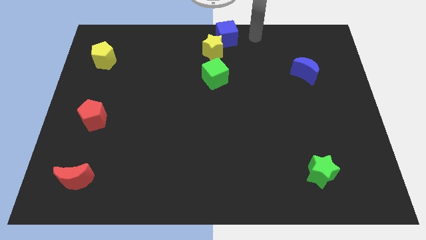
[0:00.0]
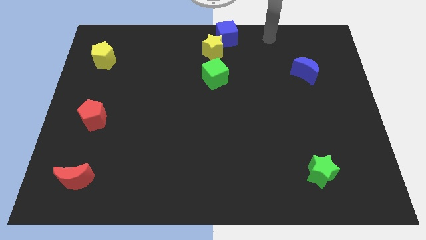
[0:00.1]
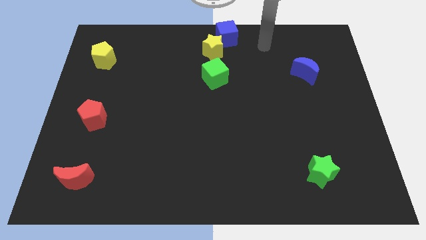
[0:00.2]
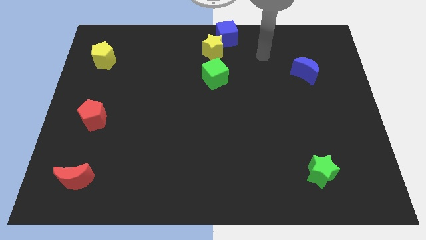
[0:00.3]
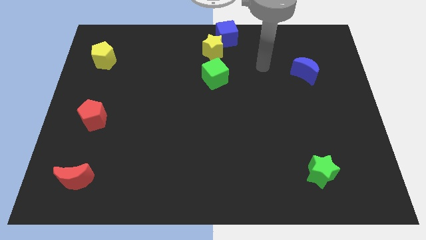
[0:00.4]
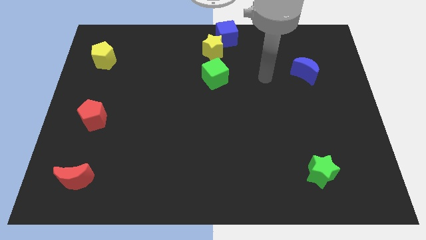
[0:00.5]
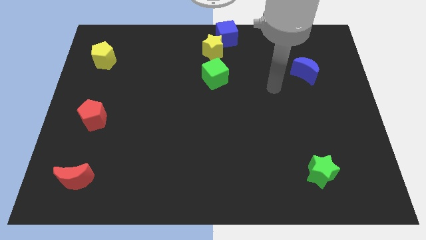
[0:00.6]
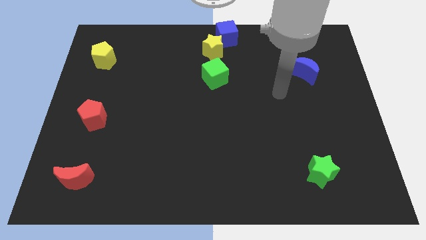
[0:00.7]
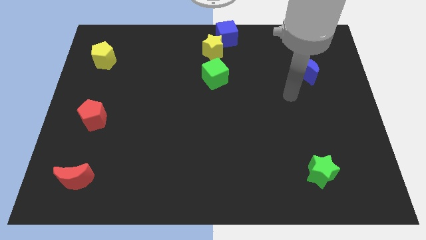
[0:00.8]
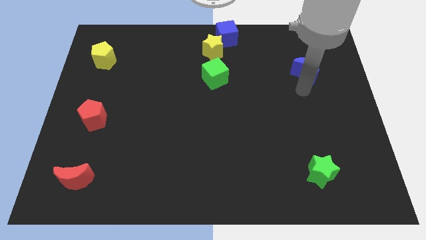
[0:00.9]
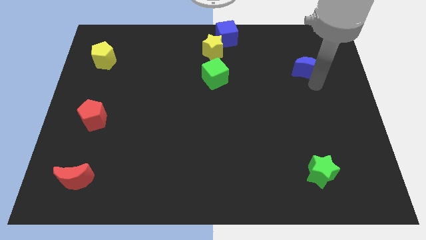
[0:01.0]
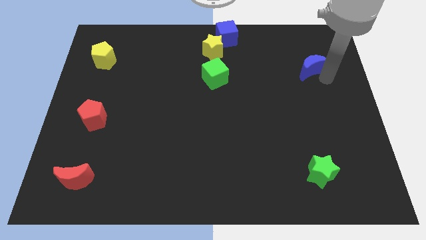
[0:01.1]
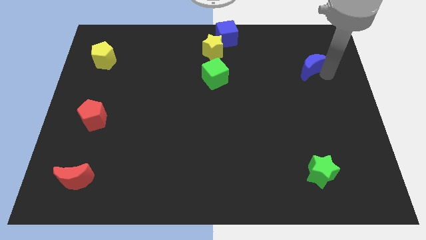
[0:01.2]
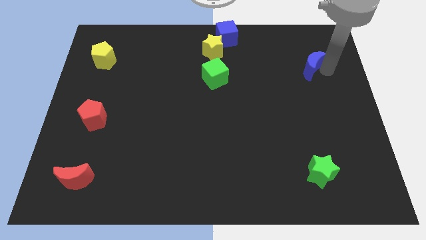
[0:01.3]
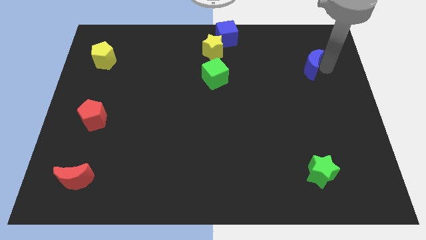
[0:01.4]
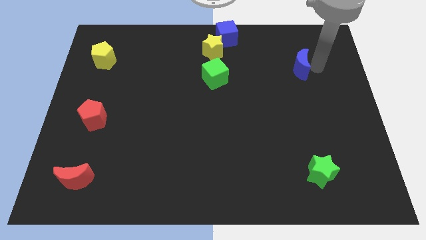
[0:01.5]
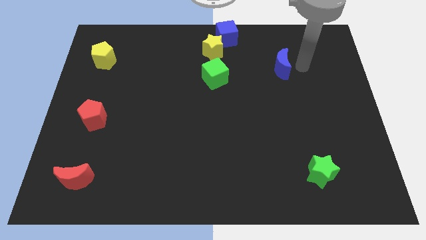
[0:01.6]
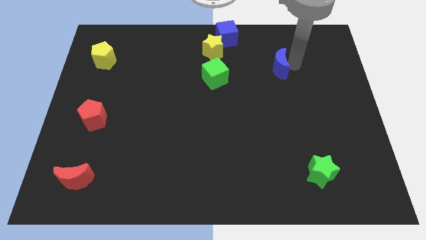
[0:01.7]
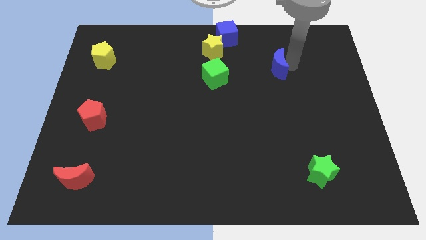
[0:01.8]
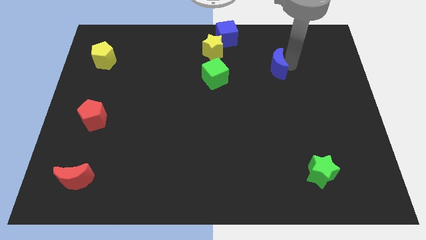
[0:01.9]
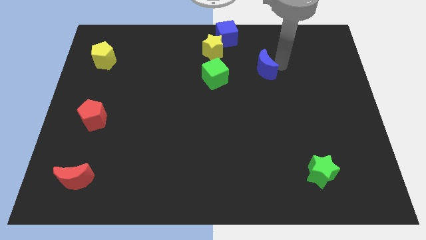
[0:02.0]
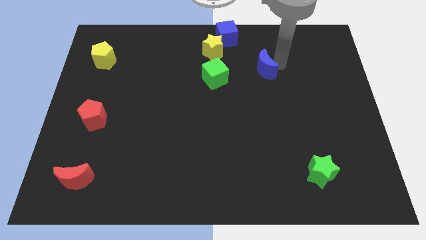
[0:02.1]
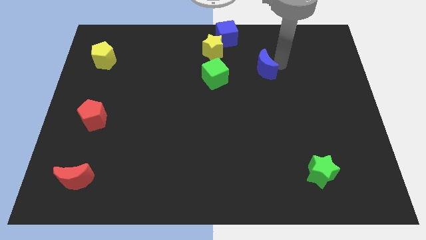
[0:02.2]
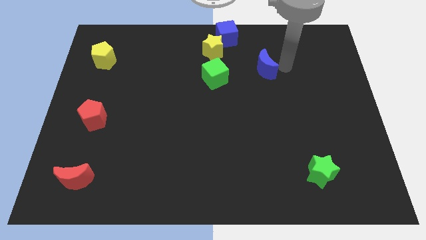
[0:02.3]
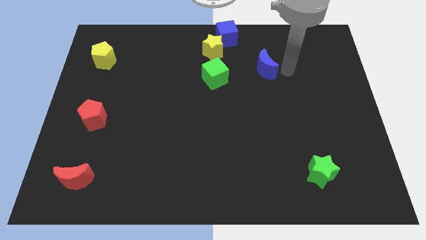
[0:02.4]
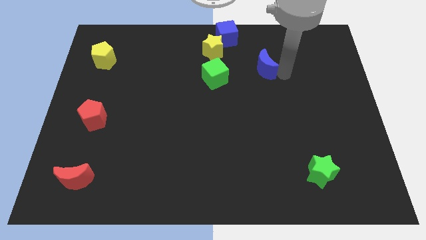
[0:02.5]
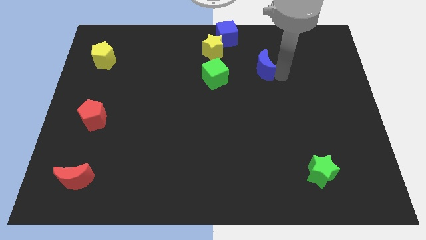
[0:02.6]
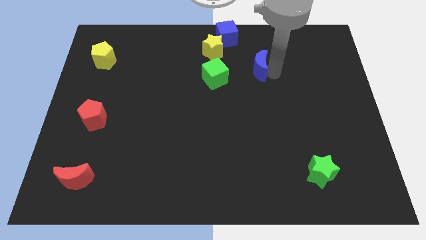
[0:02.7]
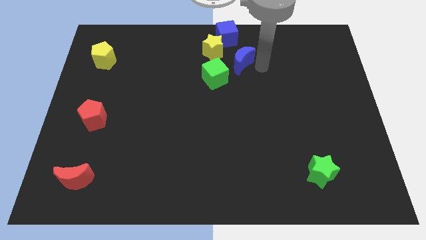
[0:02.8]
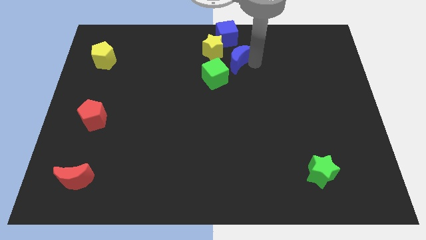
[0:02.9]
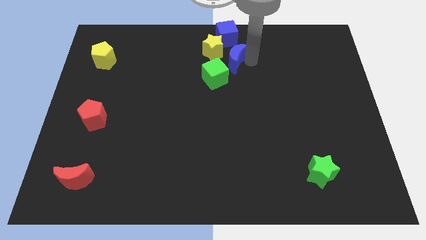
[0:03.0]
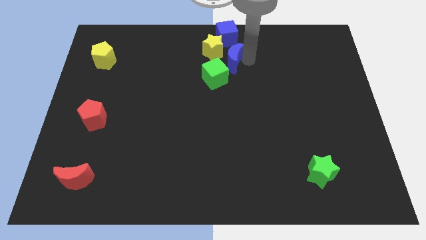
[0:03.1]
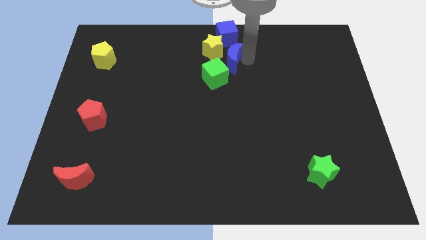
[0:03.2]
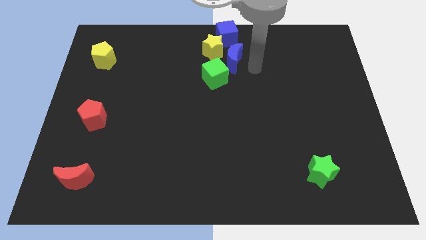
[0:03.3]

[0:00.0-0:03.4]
push blue crescent below blue cube

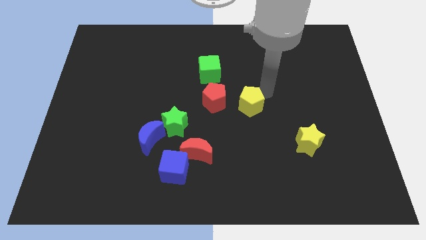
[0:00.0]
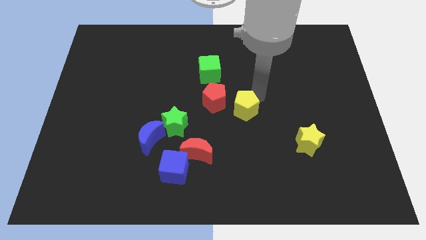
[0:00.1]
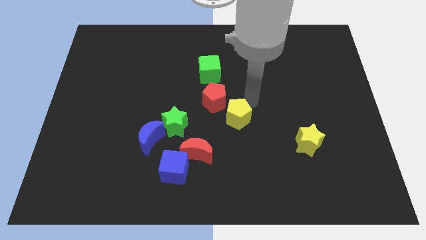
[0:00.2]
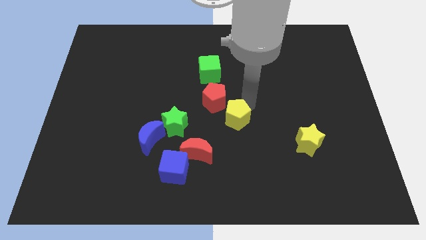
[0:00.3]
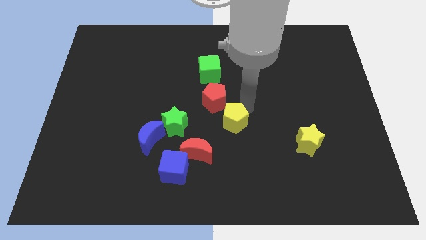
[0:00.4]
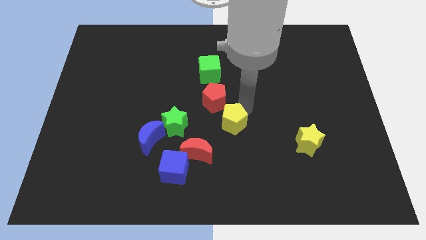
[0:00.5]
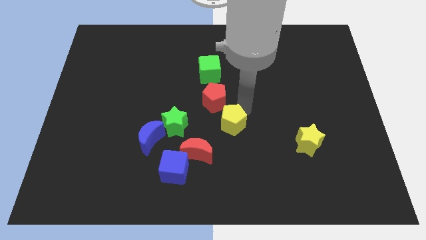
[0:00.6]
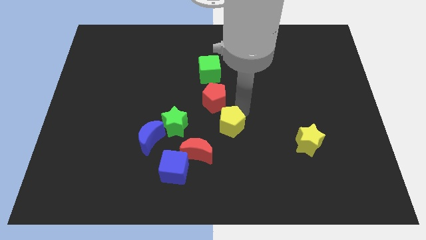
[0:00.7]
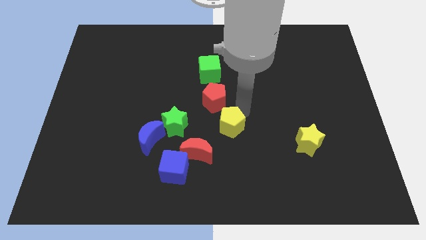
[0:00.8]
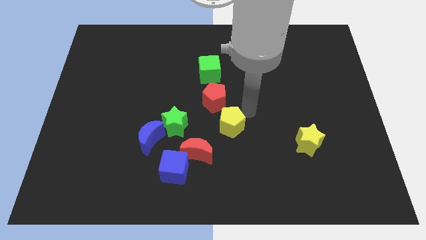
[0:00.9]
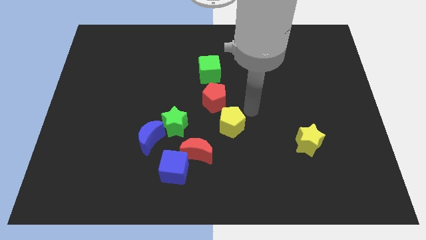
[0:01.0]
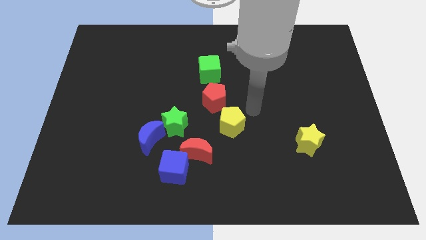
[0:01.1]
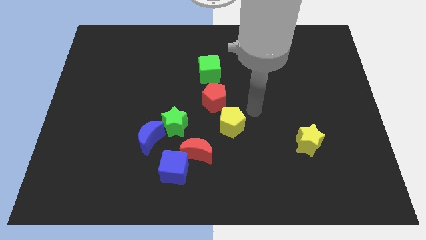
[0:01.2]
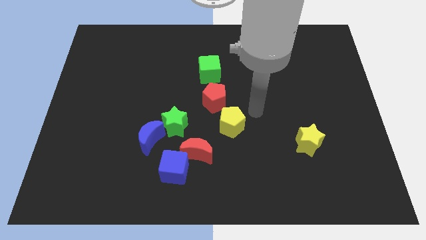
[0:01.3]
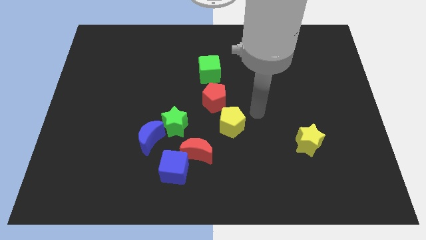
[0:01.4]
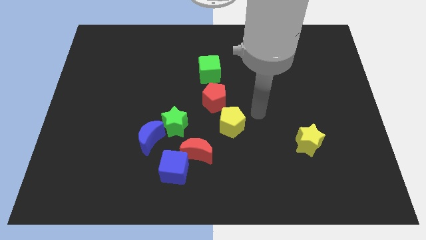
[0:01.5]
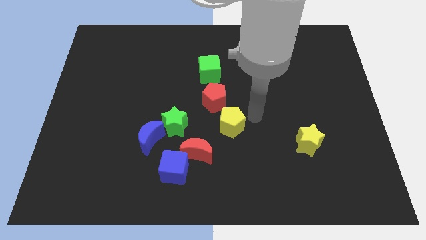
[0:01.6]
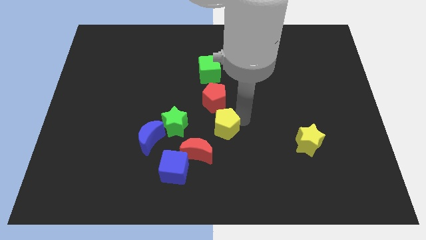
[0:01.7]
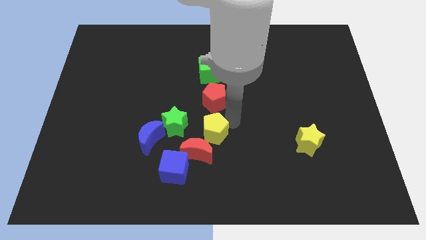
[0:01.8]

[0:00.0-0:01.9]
move the yellow pentagon to the bottom of the red pentagon

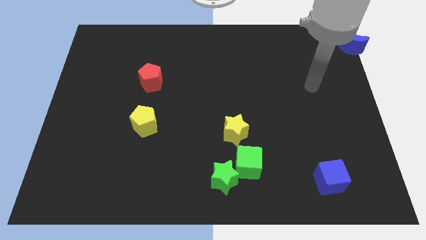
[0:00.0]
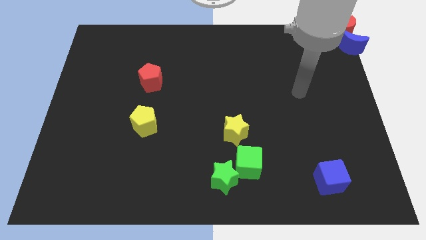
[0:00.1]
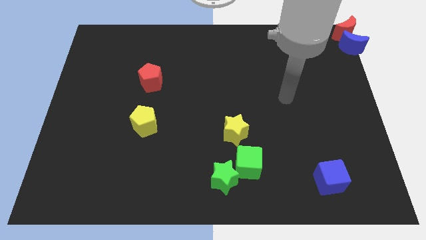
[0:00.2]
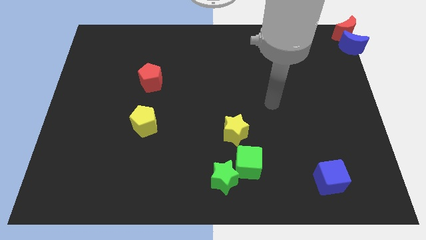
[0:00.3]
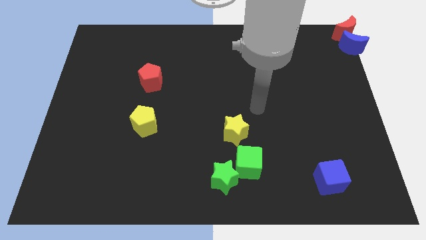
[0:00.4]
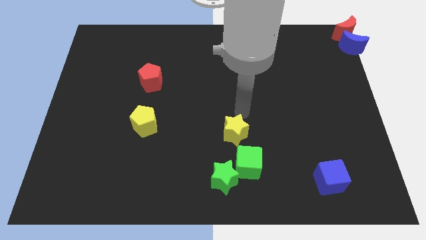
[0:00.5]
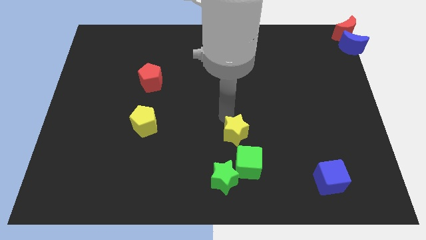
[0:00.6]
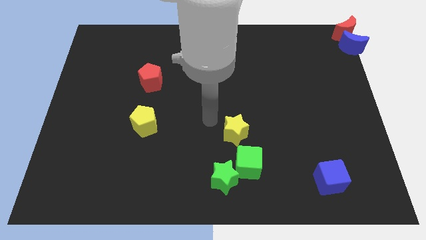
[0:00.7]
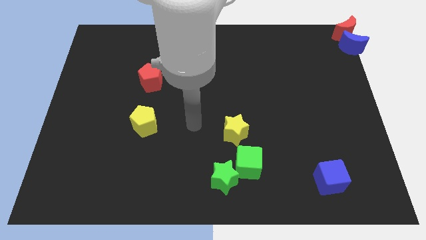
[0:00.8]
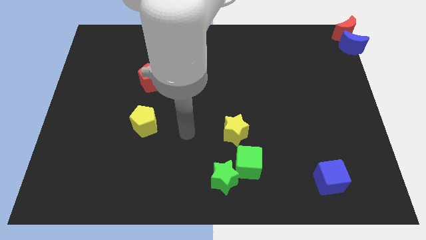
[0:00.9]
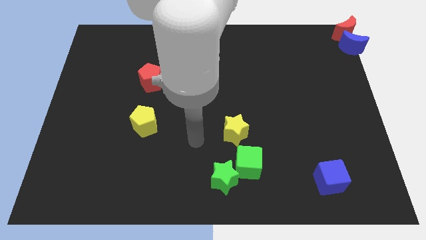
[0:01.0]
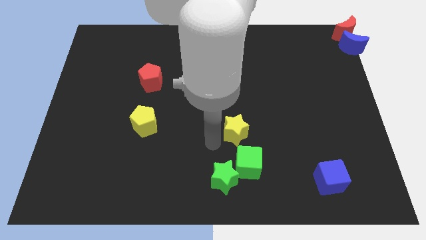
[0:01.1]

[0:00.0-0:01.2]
place your arm left to yellow star

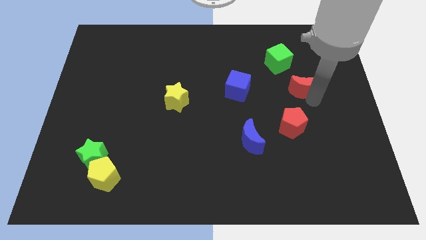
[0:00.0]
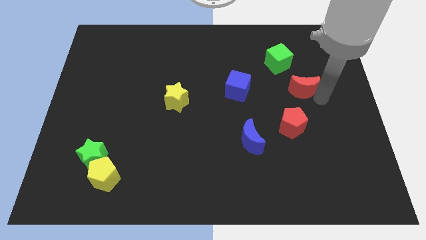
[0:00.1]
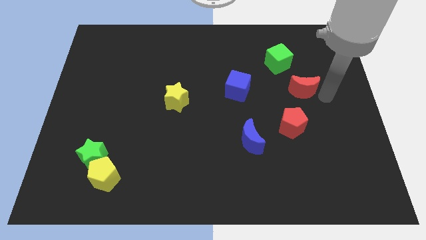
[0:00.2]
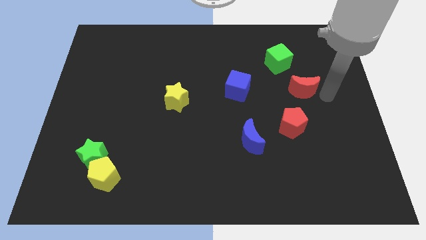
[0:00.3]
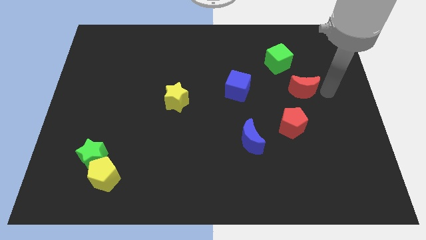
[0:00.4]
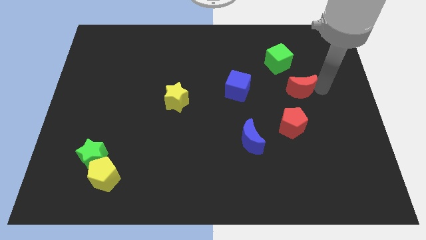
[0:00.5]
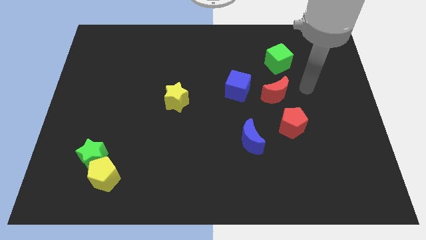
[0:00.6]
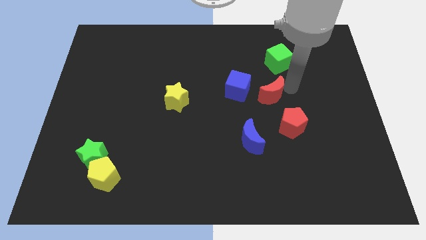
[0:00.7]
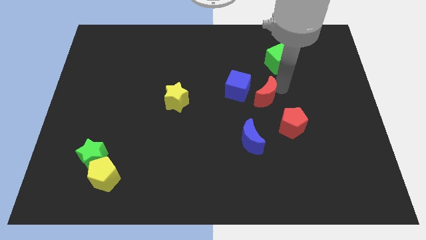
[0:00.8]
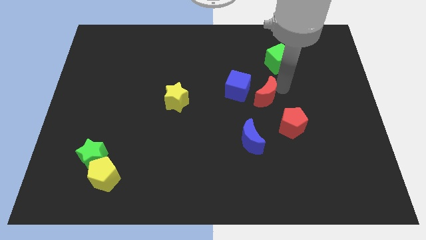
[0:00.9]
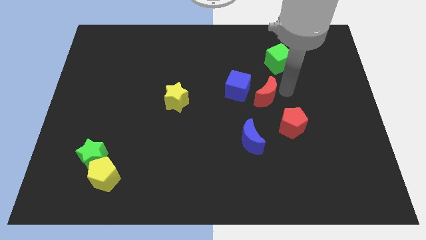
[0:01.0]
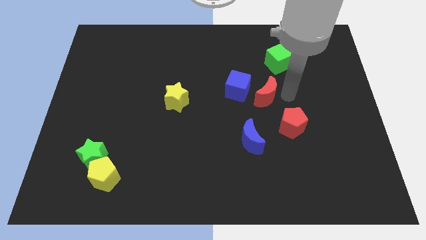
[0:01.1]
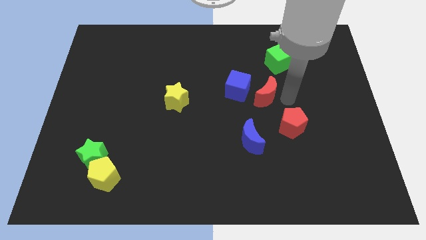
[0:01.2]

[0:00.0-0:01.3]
push the red moon towards the blue cube

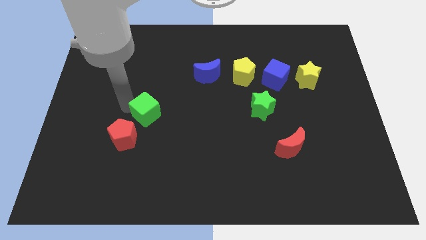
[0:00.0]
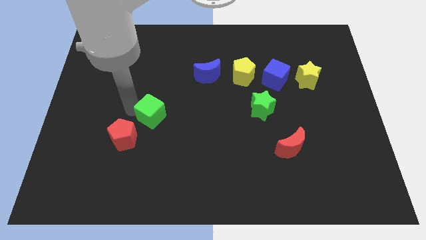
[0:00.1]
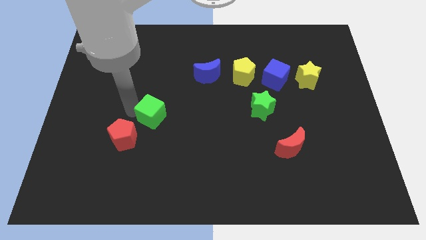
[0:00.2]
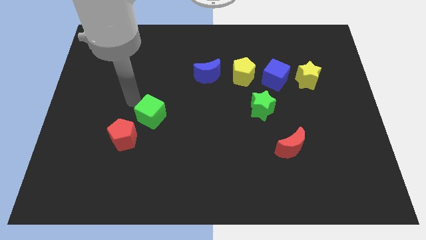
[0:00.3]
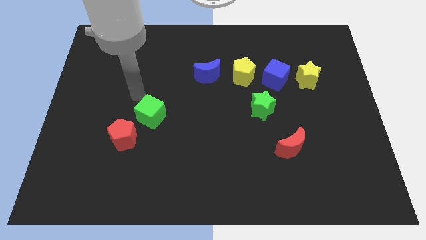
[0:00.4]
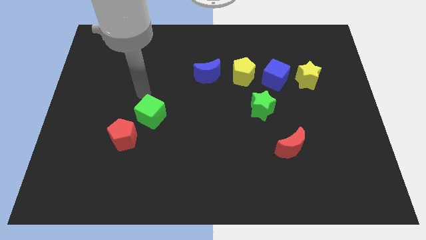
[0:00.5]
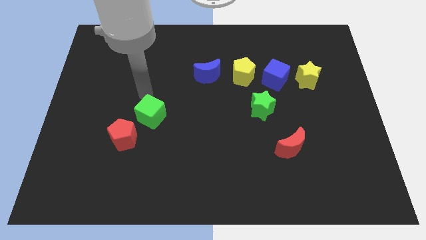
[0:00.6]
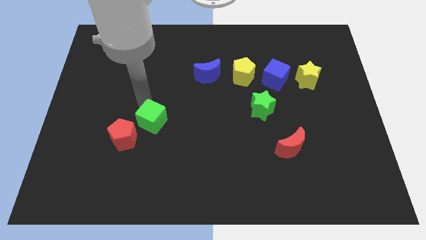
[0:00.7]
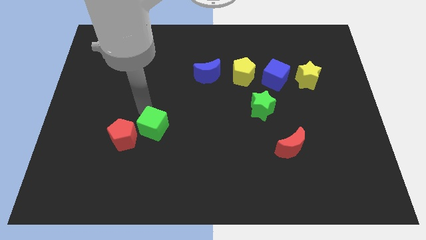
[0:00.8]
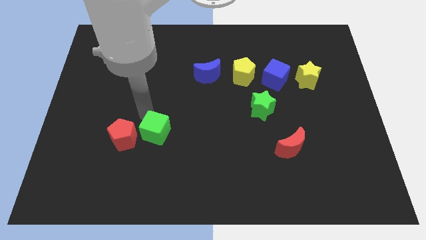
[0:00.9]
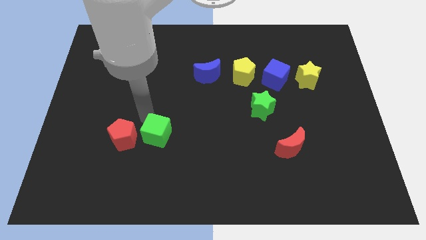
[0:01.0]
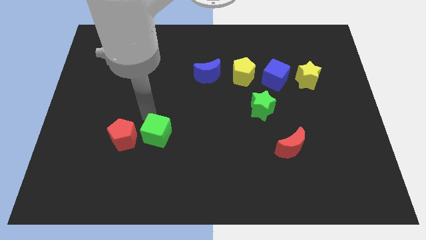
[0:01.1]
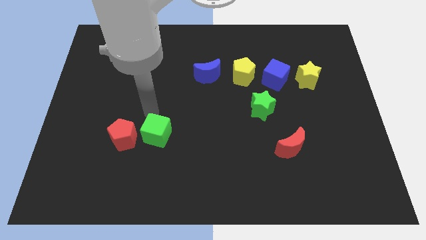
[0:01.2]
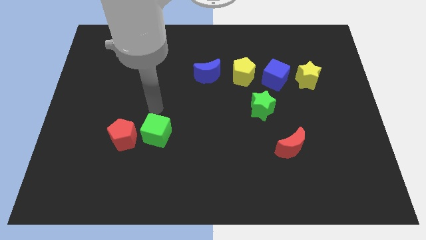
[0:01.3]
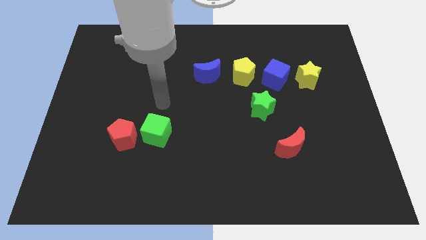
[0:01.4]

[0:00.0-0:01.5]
place green cube right to red pentagon
